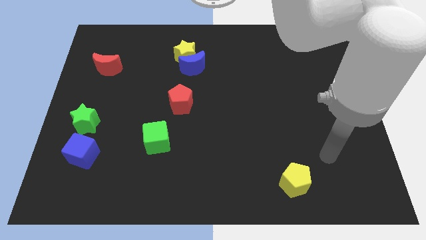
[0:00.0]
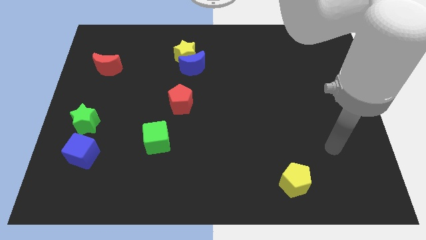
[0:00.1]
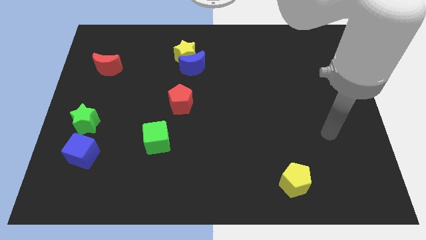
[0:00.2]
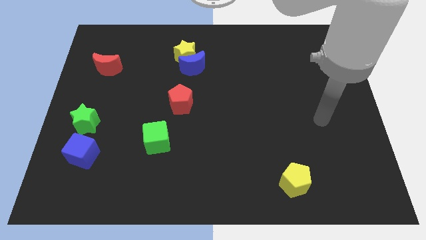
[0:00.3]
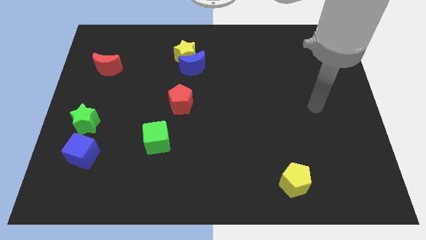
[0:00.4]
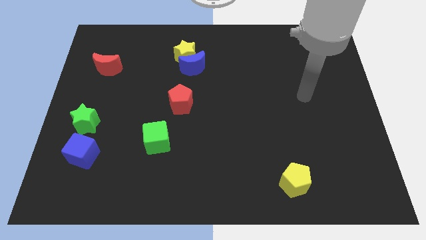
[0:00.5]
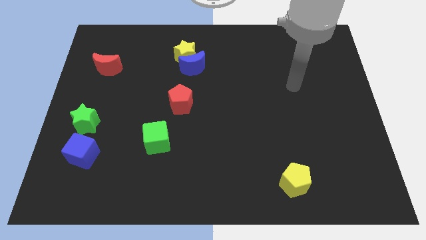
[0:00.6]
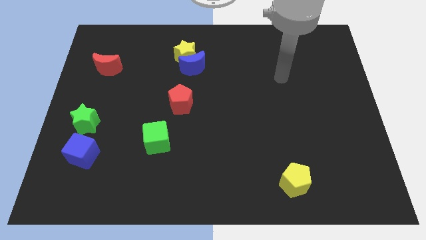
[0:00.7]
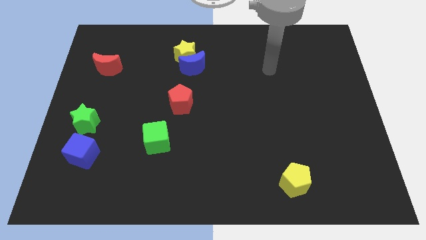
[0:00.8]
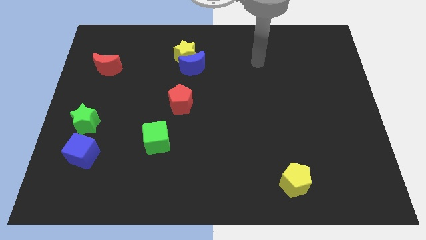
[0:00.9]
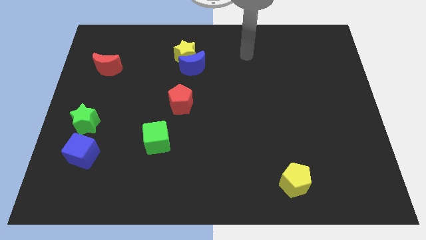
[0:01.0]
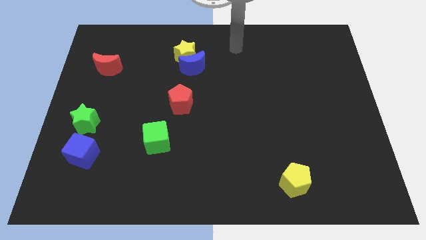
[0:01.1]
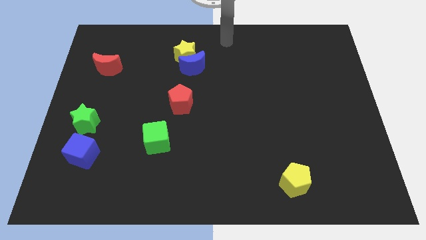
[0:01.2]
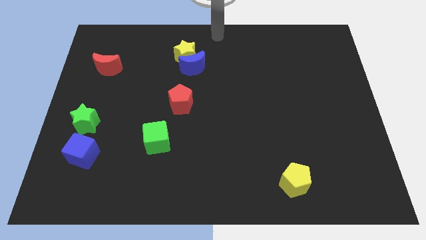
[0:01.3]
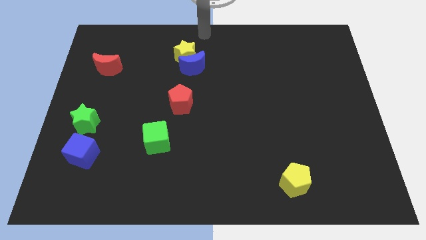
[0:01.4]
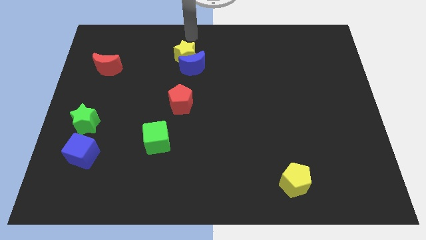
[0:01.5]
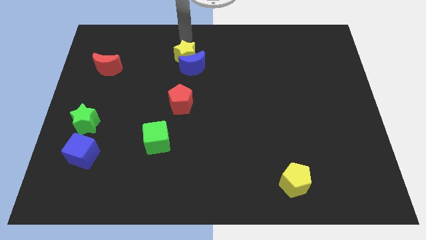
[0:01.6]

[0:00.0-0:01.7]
place your arm to the top of the yellow star

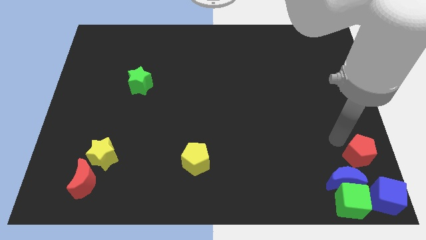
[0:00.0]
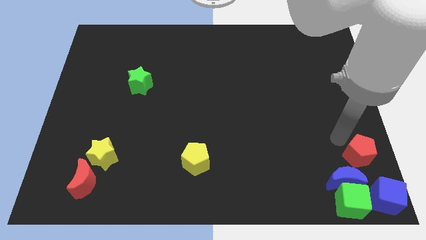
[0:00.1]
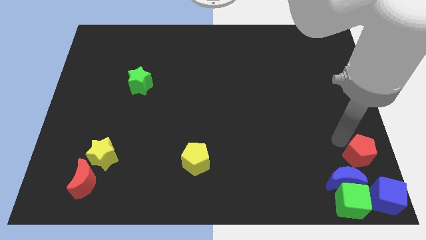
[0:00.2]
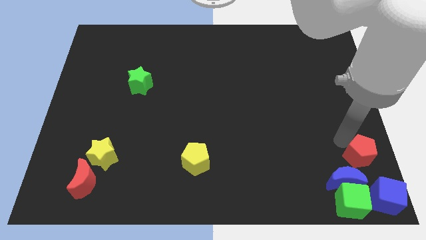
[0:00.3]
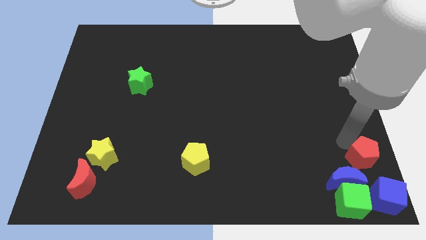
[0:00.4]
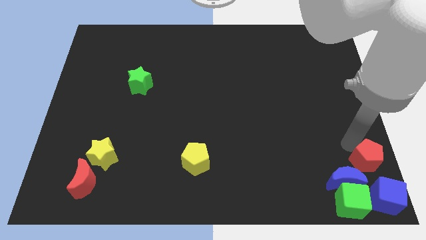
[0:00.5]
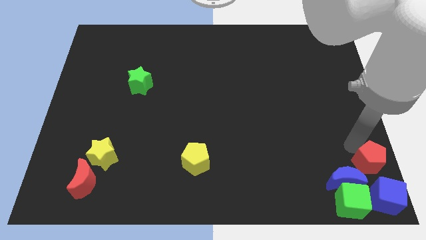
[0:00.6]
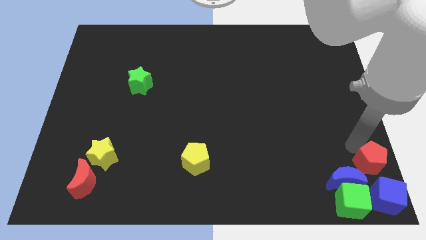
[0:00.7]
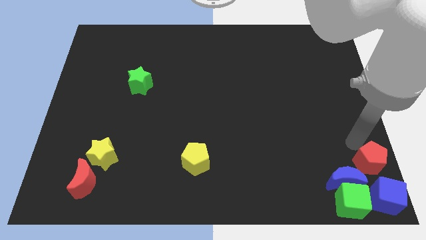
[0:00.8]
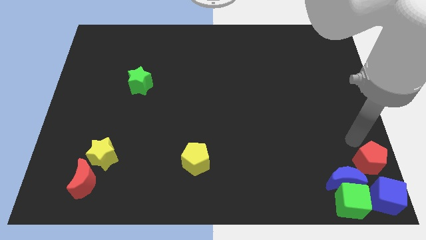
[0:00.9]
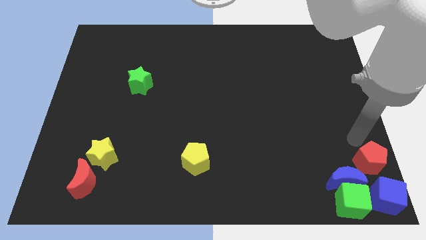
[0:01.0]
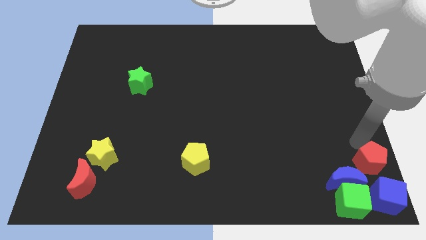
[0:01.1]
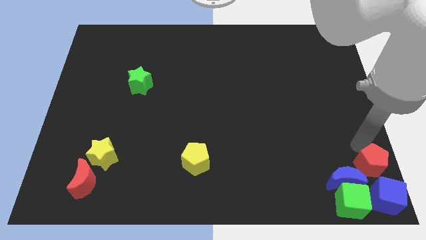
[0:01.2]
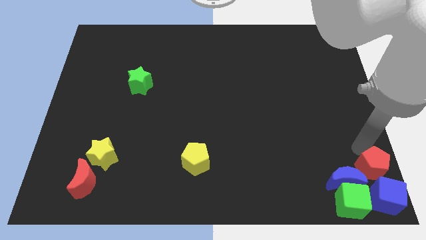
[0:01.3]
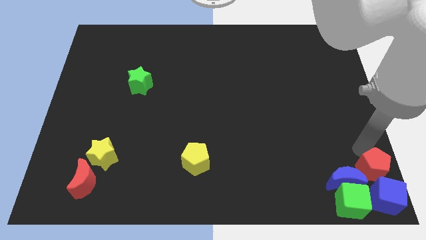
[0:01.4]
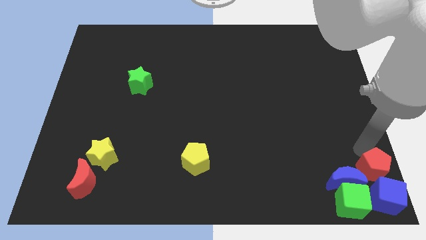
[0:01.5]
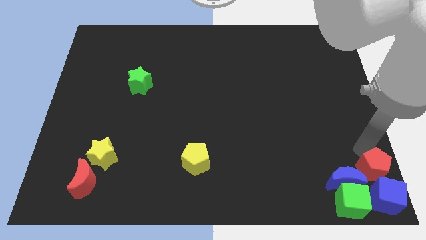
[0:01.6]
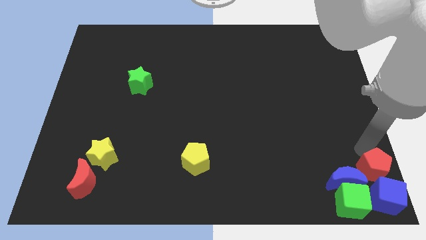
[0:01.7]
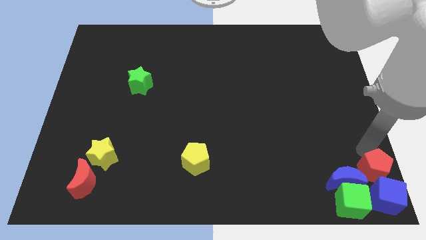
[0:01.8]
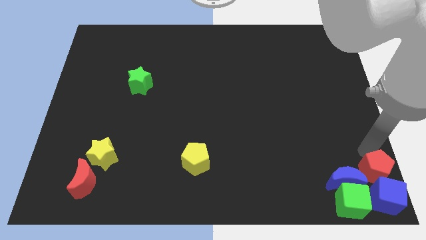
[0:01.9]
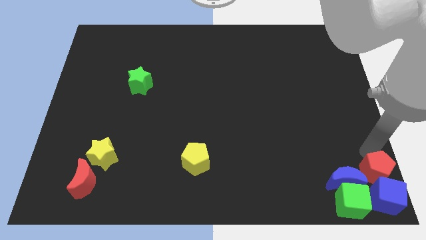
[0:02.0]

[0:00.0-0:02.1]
move the red pentagon down to the blue cube

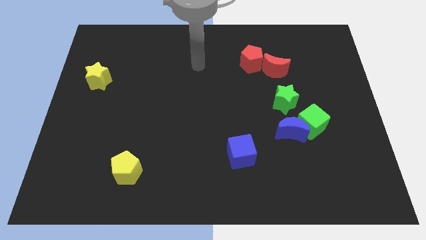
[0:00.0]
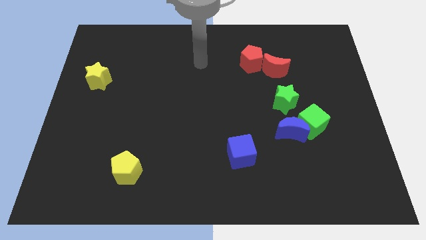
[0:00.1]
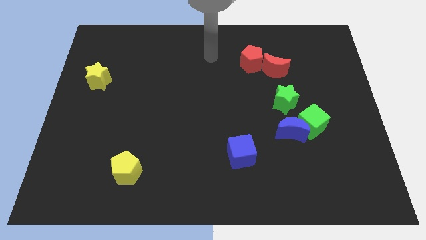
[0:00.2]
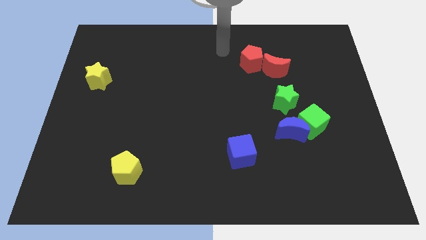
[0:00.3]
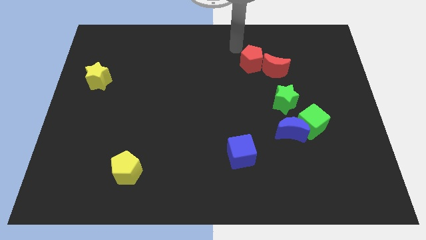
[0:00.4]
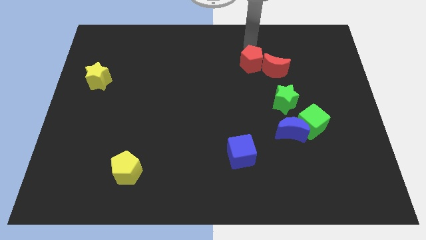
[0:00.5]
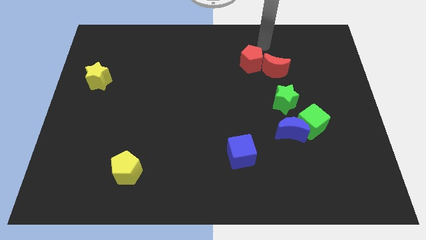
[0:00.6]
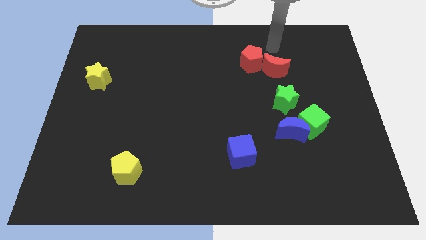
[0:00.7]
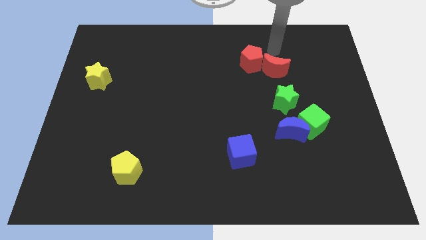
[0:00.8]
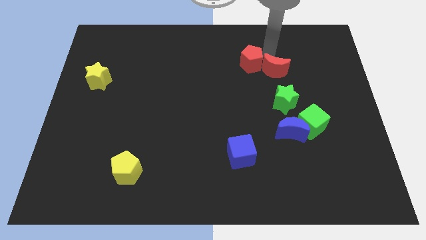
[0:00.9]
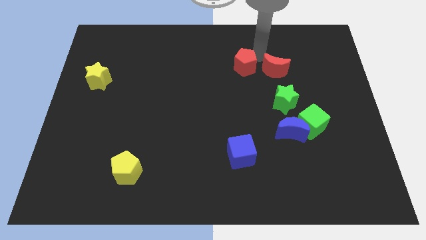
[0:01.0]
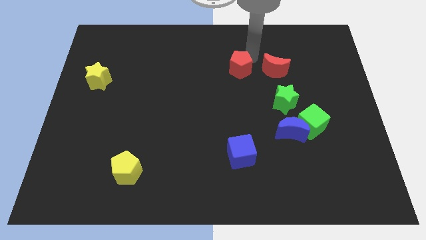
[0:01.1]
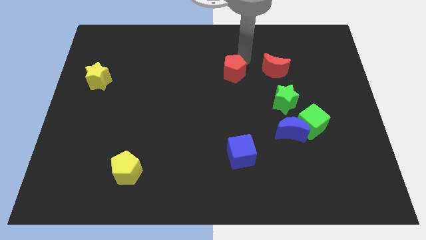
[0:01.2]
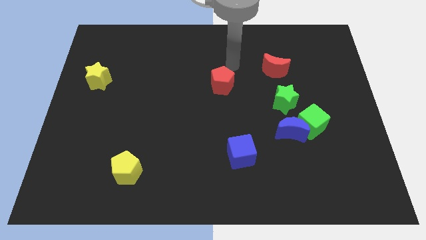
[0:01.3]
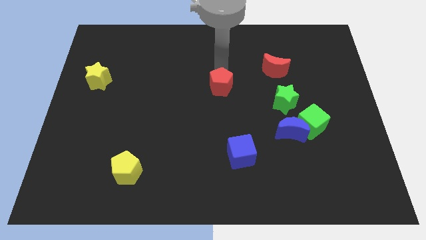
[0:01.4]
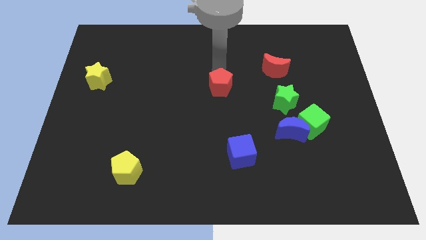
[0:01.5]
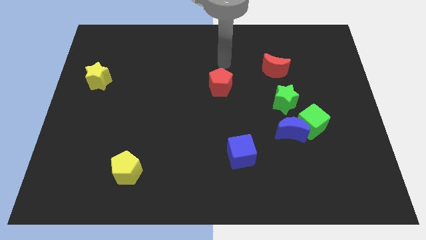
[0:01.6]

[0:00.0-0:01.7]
separate the red pentagon away from the red moon

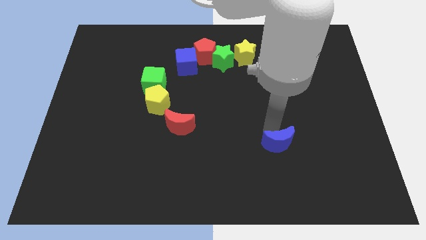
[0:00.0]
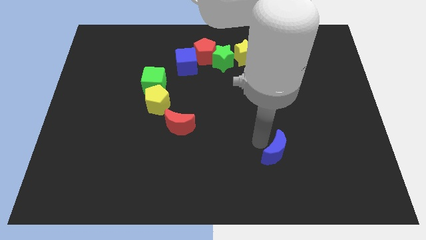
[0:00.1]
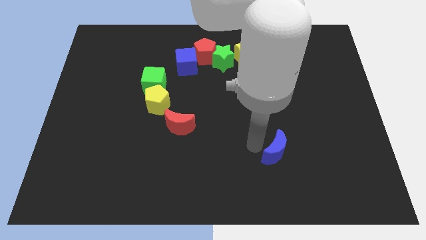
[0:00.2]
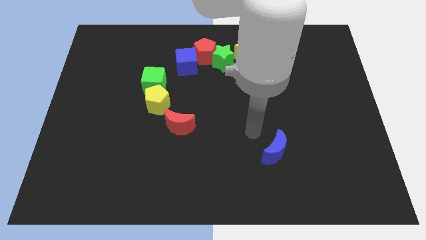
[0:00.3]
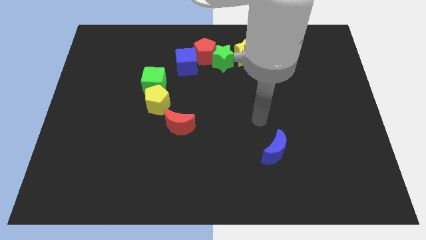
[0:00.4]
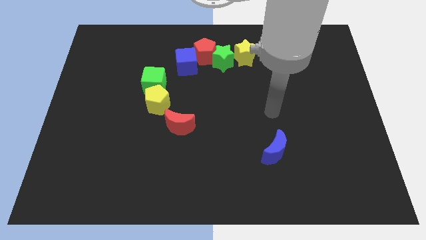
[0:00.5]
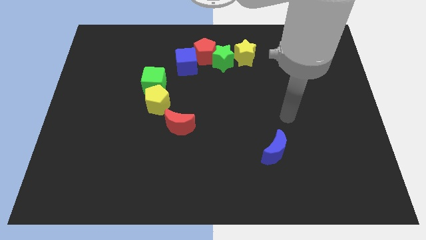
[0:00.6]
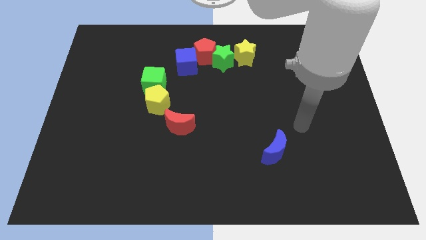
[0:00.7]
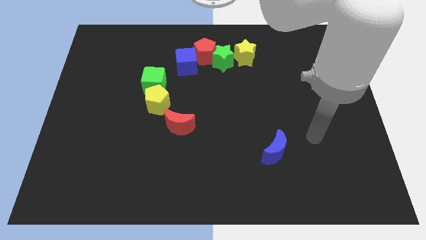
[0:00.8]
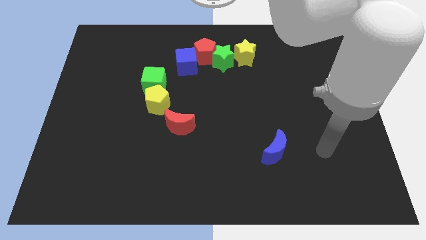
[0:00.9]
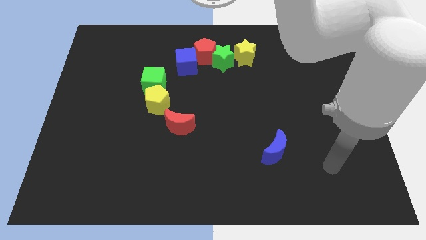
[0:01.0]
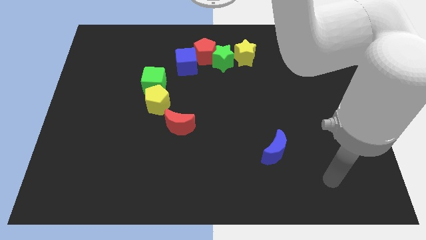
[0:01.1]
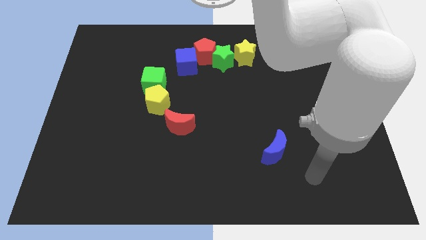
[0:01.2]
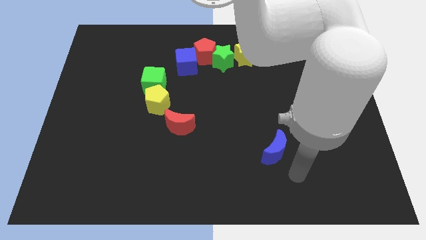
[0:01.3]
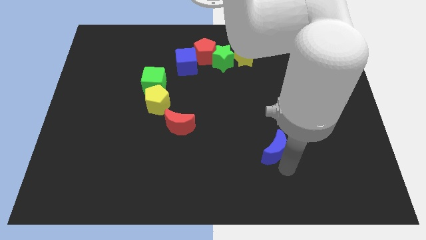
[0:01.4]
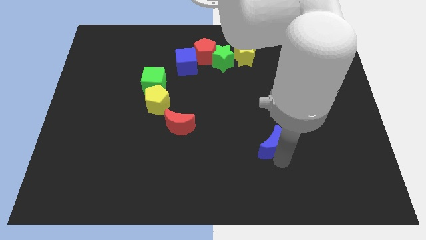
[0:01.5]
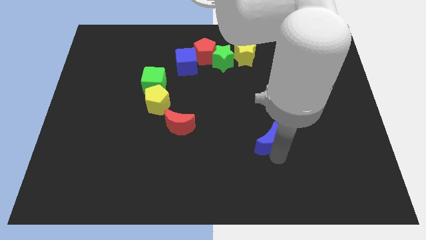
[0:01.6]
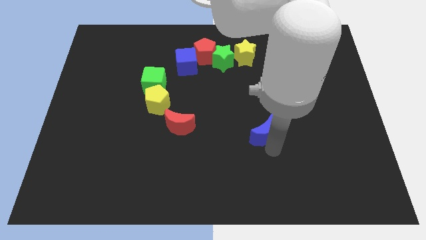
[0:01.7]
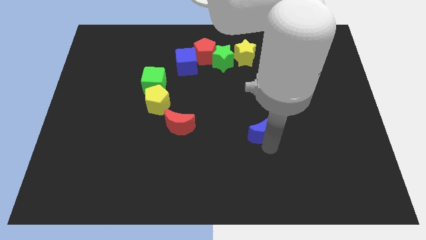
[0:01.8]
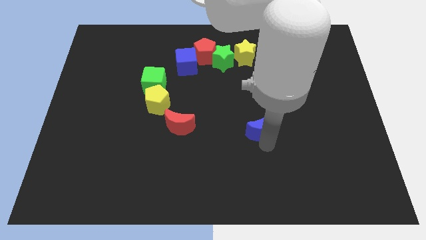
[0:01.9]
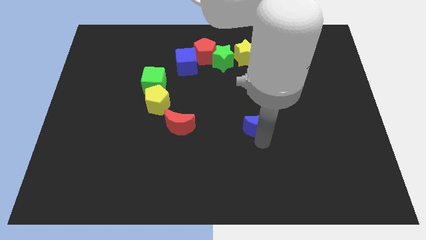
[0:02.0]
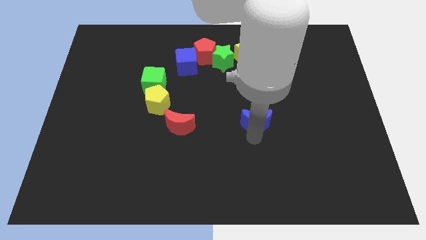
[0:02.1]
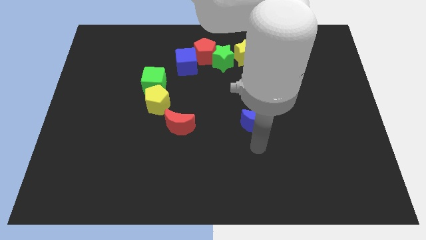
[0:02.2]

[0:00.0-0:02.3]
place the blue moon to the parallel right of the red moon

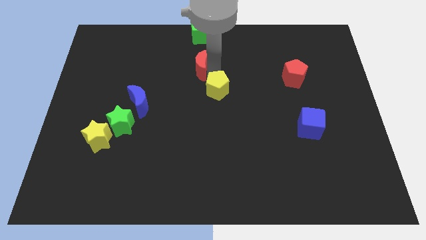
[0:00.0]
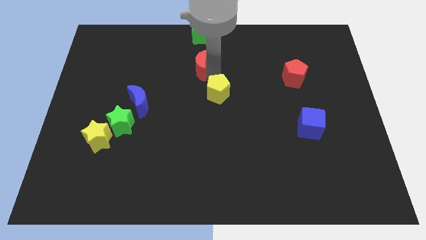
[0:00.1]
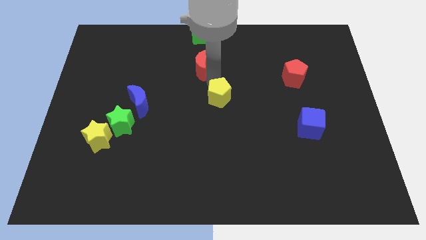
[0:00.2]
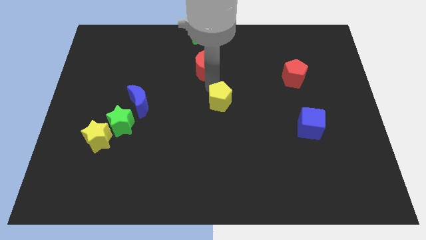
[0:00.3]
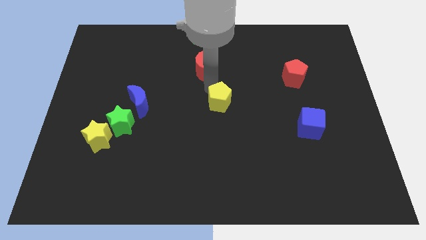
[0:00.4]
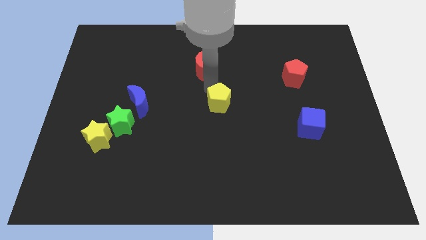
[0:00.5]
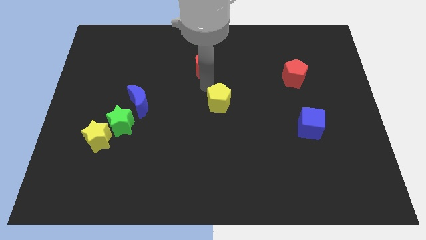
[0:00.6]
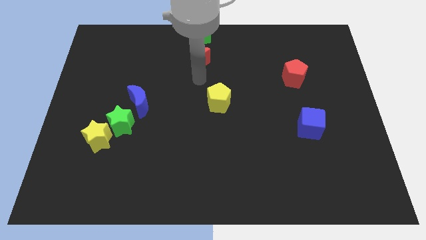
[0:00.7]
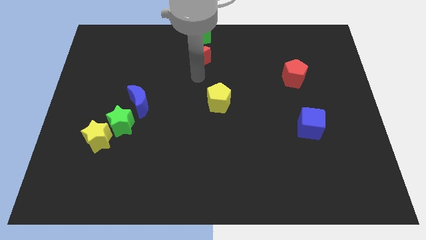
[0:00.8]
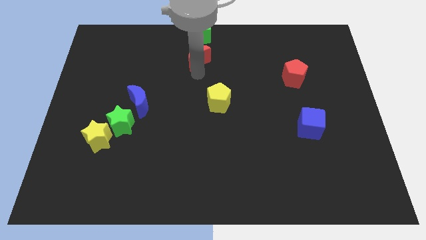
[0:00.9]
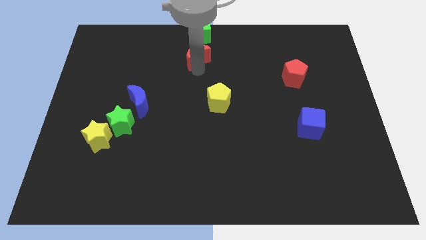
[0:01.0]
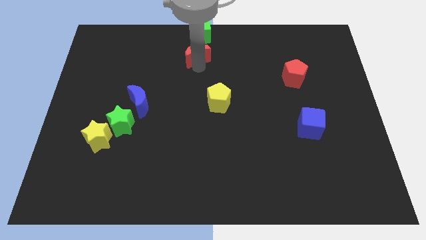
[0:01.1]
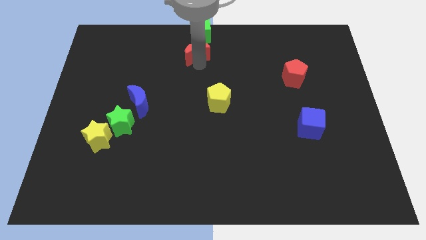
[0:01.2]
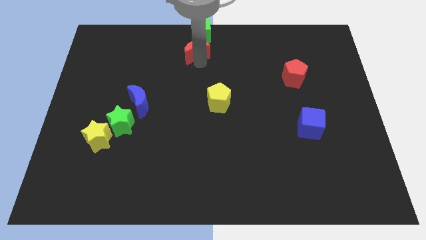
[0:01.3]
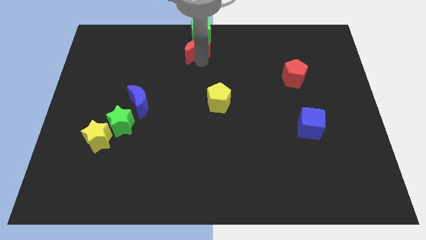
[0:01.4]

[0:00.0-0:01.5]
separate the yellow pentagon and the red crescent
